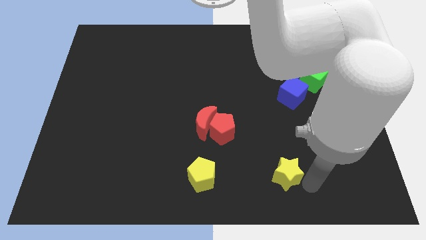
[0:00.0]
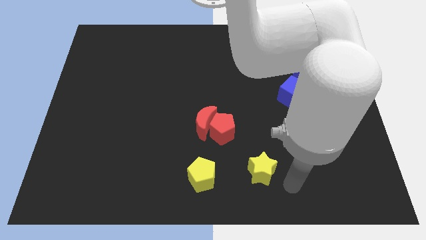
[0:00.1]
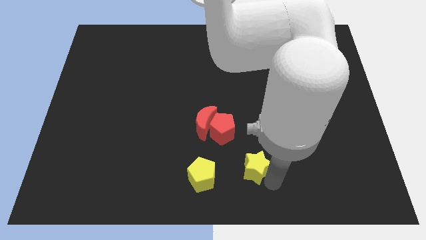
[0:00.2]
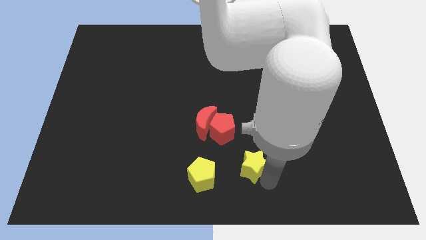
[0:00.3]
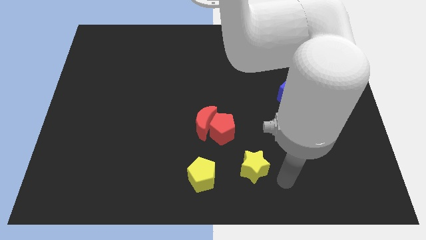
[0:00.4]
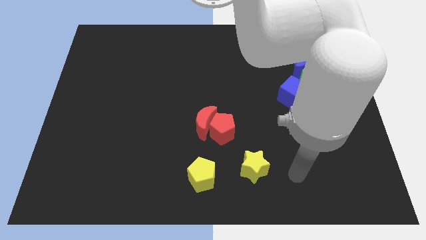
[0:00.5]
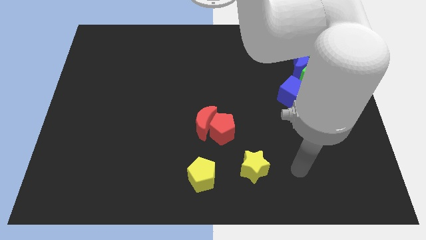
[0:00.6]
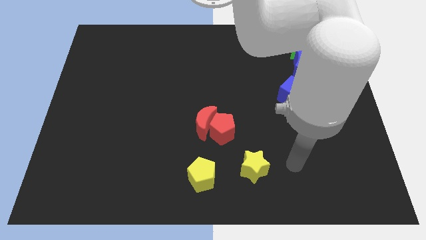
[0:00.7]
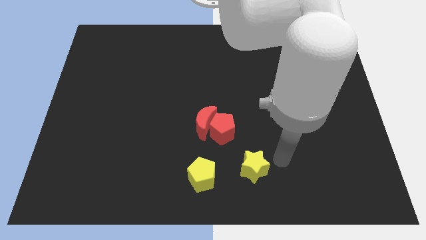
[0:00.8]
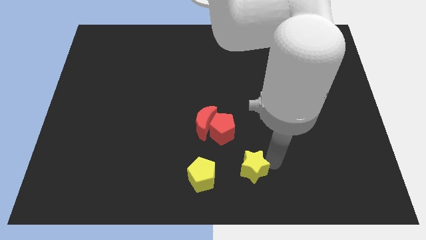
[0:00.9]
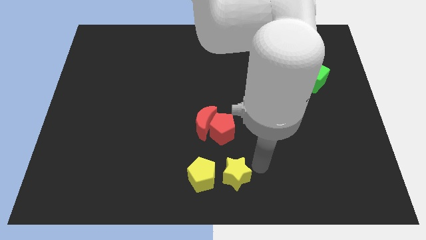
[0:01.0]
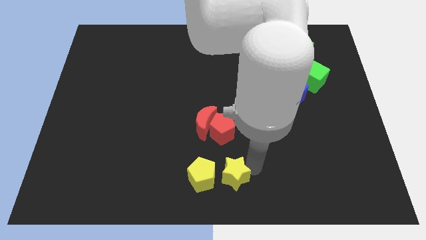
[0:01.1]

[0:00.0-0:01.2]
drag the yellow star to the right of the yellow pentagon

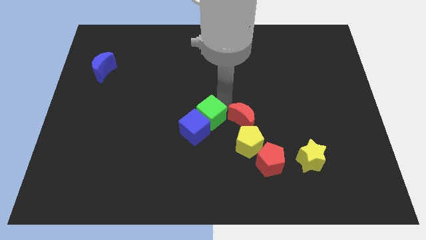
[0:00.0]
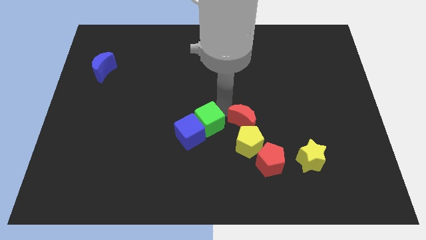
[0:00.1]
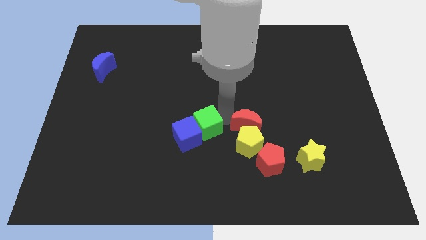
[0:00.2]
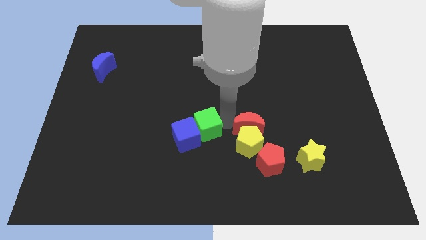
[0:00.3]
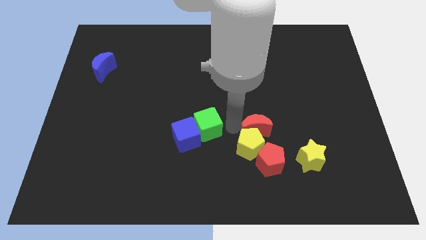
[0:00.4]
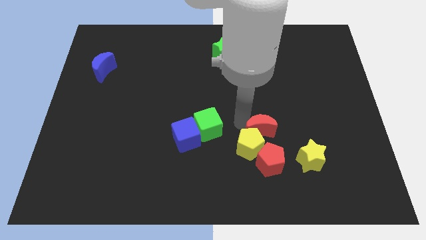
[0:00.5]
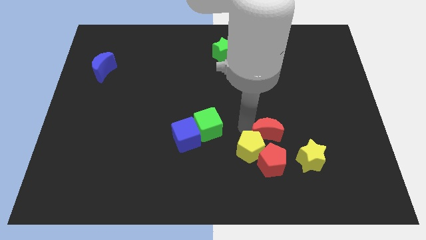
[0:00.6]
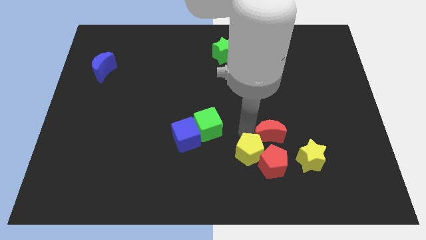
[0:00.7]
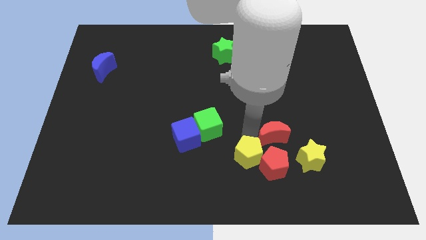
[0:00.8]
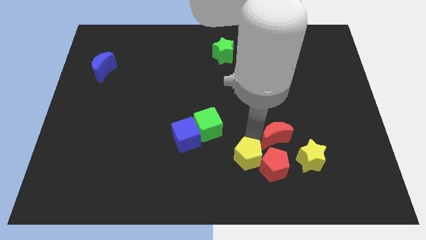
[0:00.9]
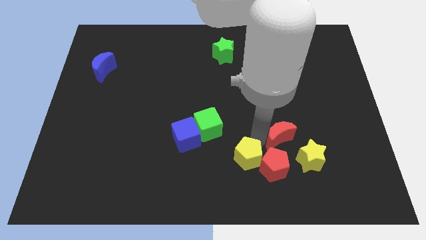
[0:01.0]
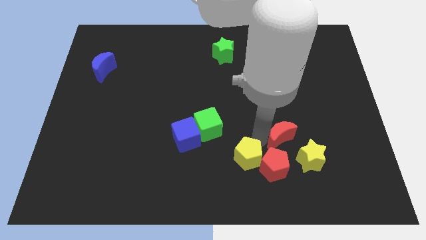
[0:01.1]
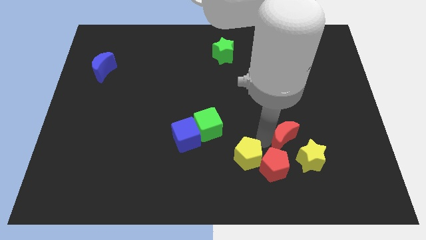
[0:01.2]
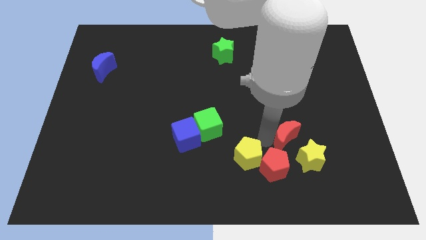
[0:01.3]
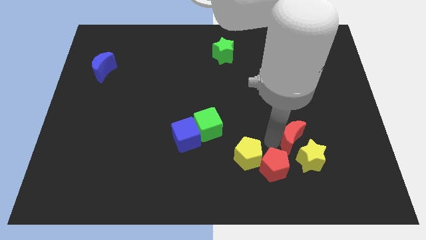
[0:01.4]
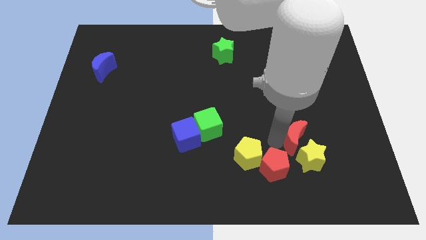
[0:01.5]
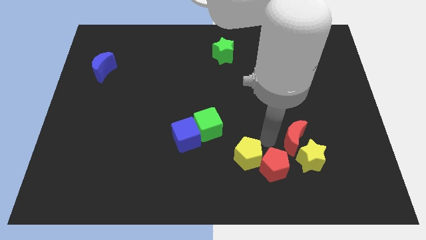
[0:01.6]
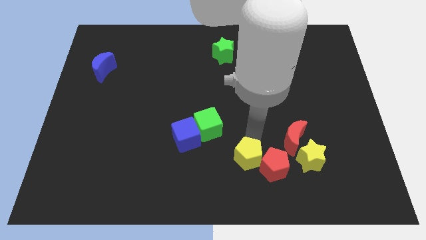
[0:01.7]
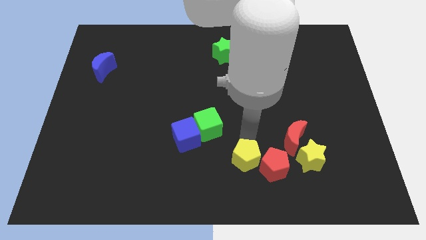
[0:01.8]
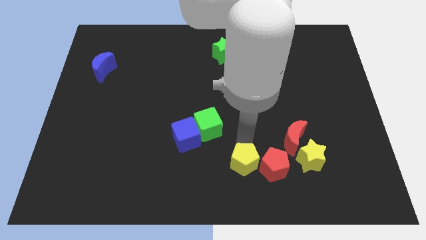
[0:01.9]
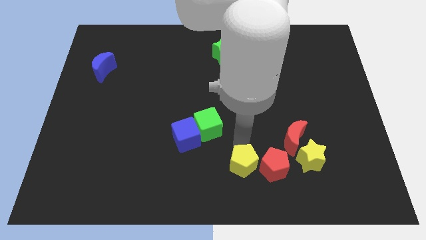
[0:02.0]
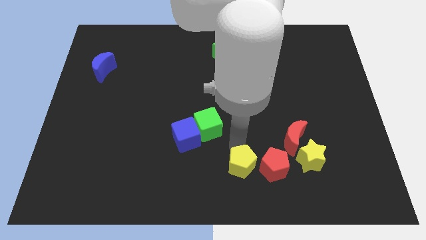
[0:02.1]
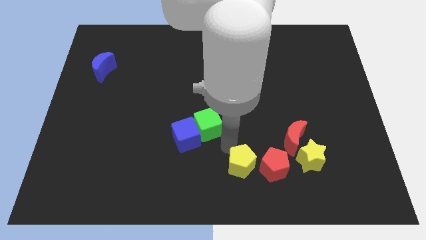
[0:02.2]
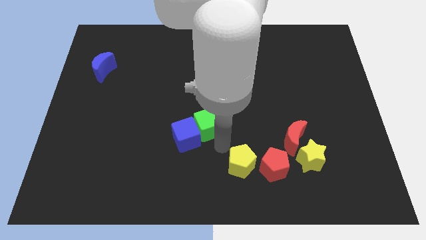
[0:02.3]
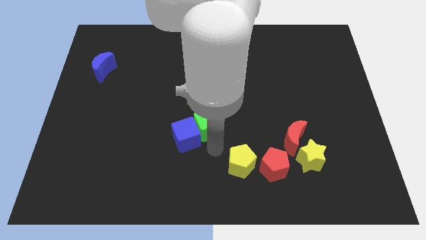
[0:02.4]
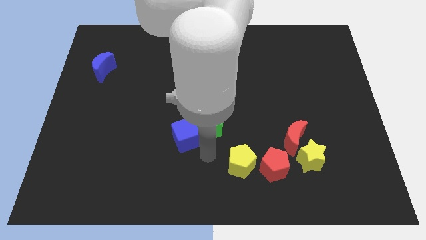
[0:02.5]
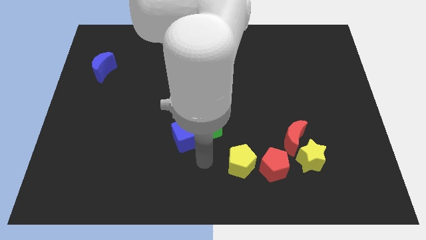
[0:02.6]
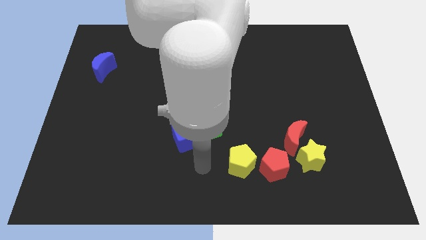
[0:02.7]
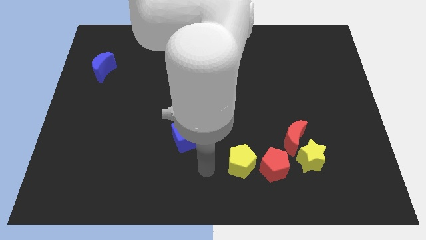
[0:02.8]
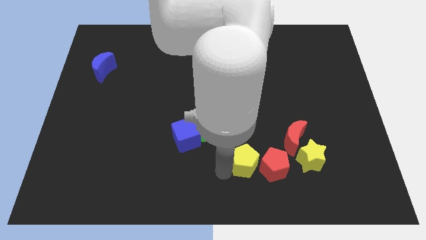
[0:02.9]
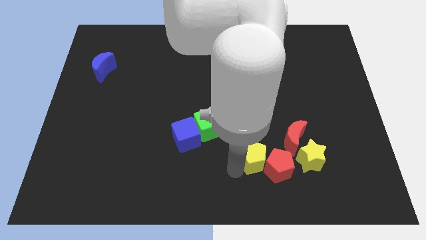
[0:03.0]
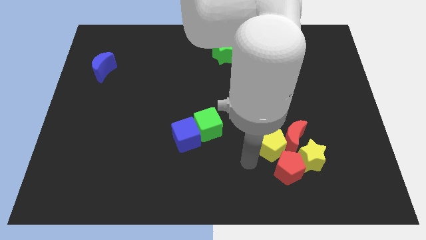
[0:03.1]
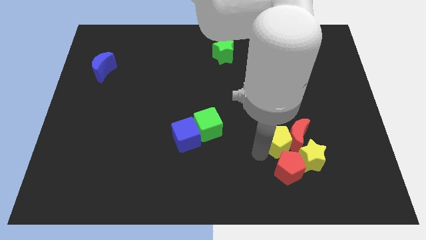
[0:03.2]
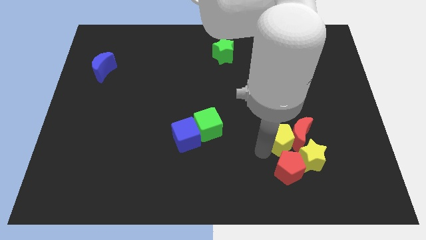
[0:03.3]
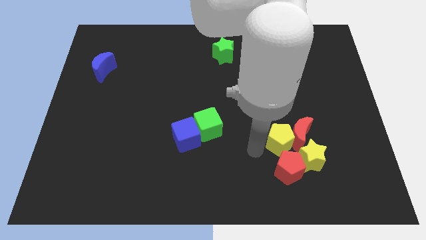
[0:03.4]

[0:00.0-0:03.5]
move the red crescent yellow pentagon close to the red pentagon and yellow star

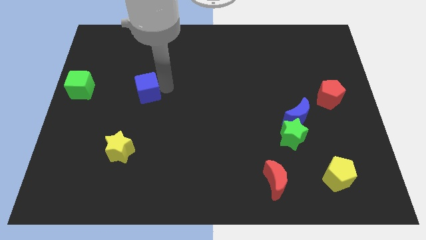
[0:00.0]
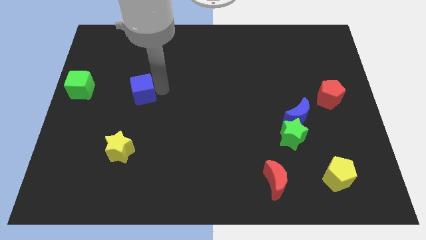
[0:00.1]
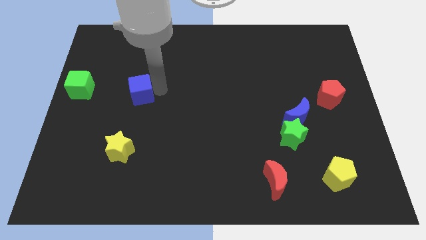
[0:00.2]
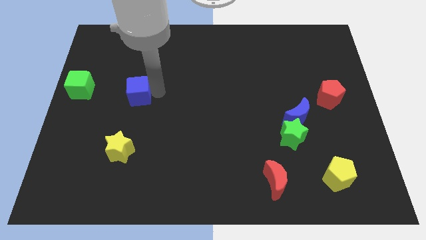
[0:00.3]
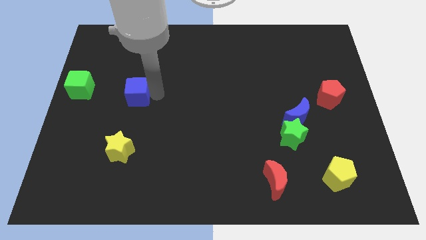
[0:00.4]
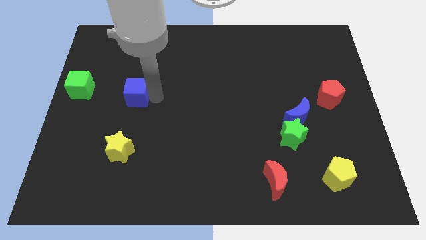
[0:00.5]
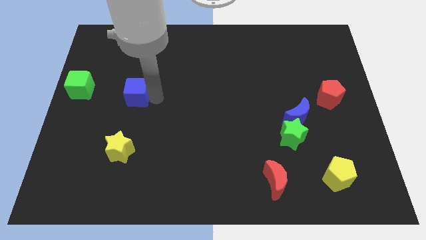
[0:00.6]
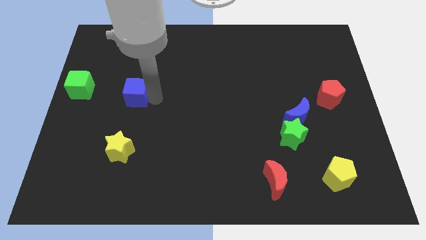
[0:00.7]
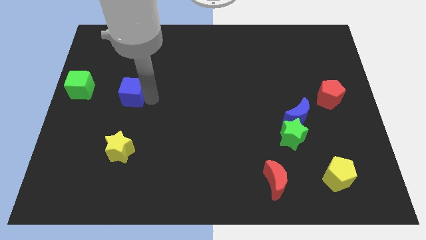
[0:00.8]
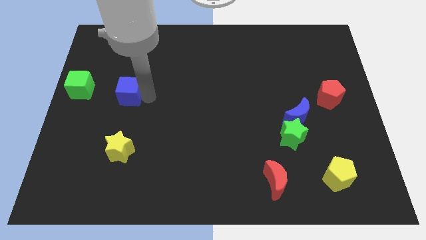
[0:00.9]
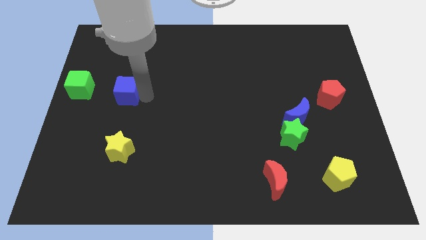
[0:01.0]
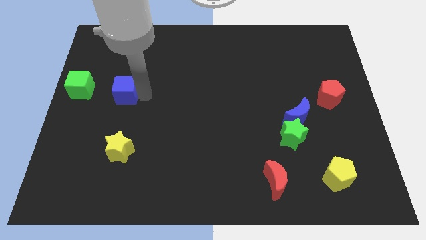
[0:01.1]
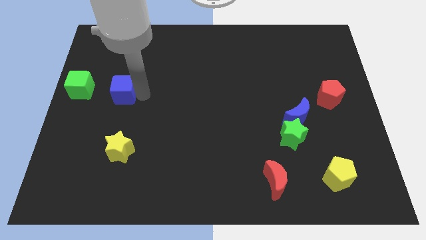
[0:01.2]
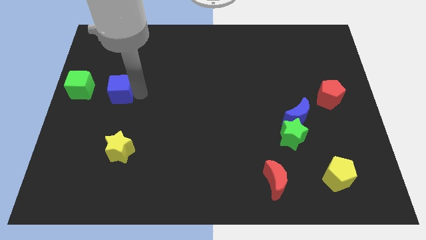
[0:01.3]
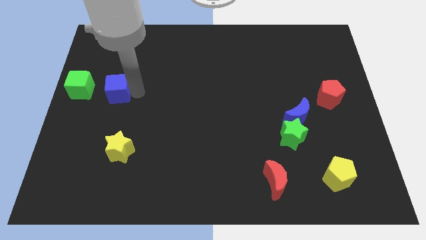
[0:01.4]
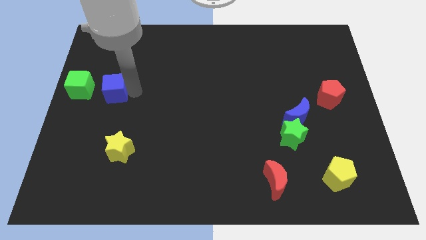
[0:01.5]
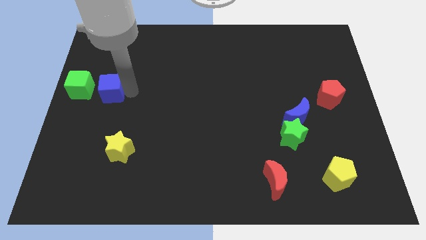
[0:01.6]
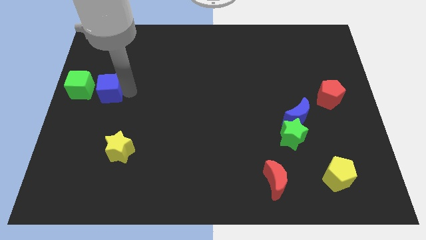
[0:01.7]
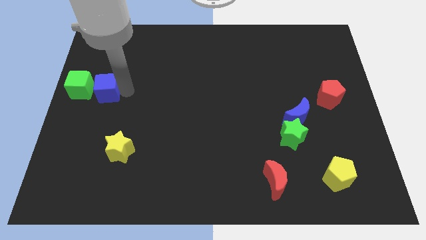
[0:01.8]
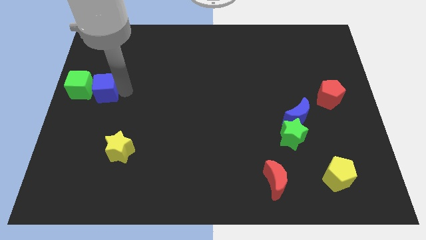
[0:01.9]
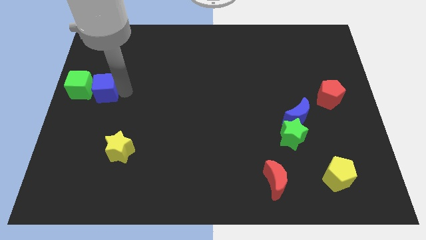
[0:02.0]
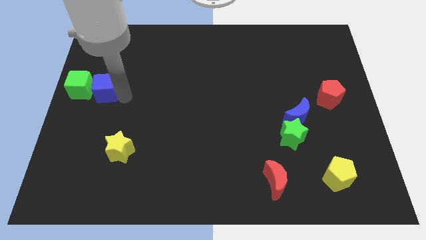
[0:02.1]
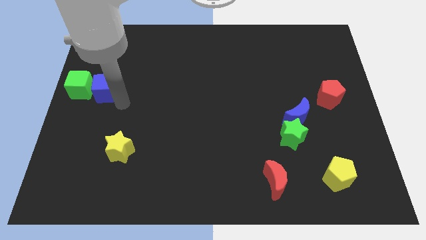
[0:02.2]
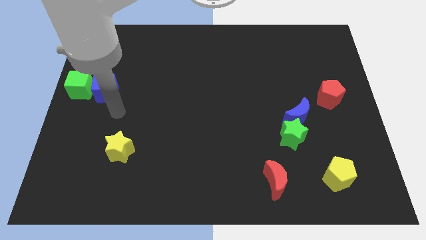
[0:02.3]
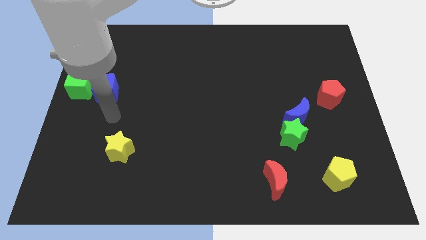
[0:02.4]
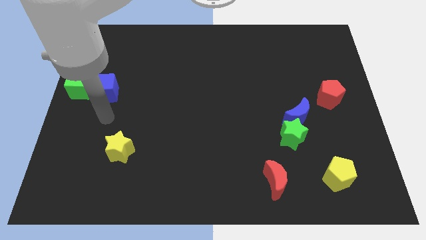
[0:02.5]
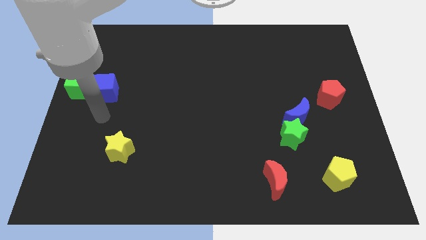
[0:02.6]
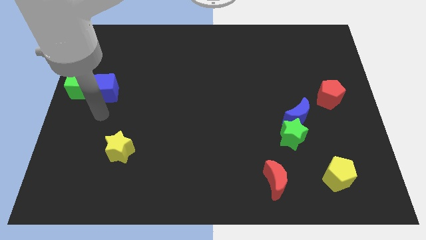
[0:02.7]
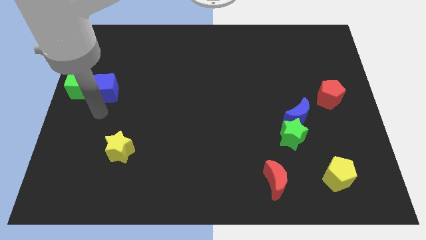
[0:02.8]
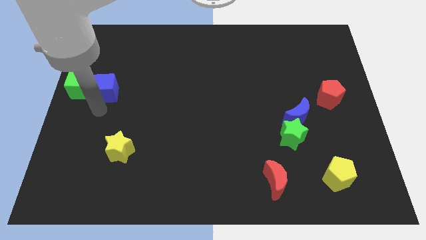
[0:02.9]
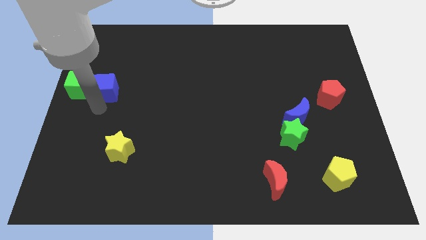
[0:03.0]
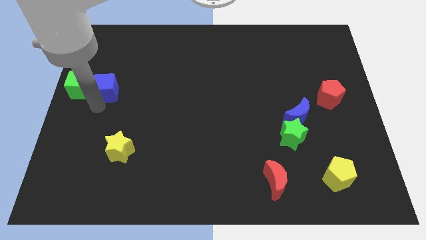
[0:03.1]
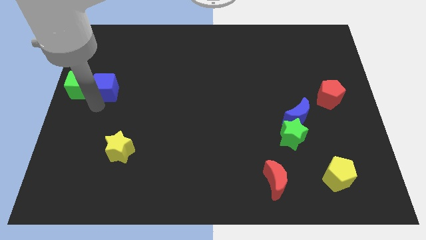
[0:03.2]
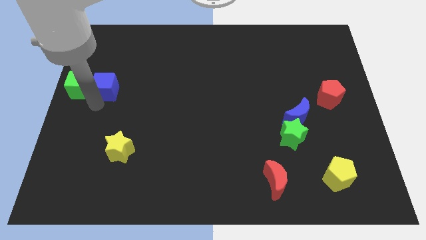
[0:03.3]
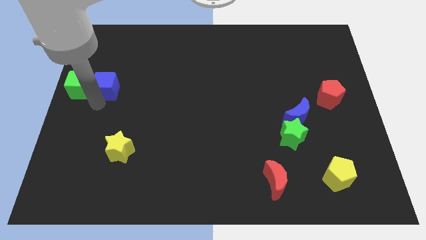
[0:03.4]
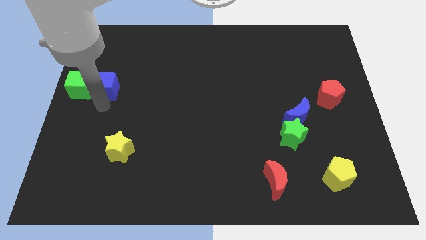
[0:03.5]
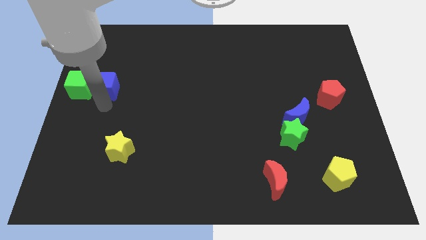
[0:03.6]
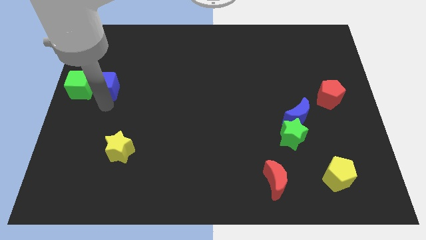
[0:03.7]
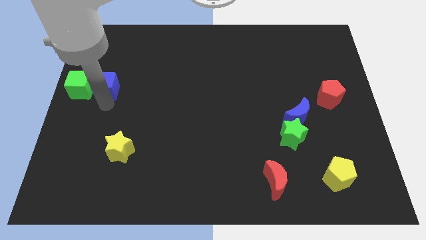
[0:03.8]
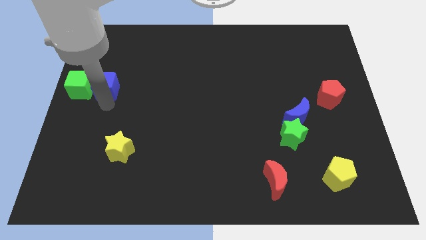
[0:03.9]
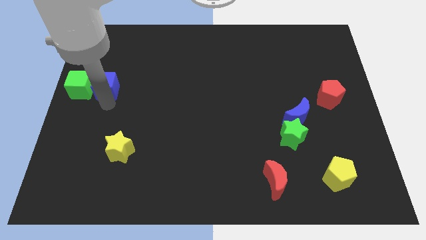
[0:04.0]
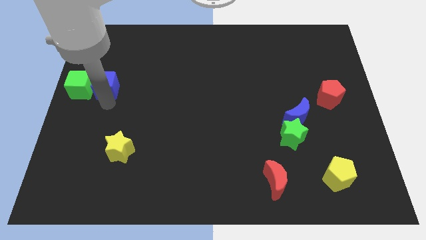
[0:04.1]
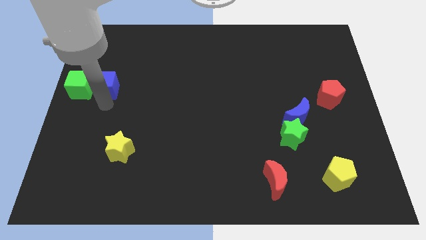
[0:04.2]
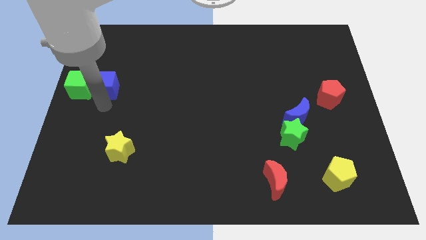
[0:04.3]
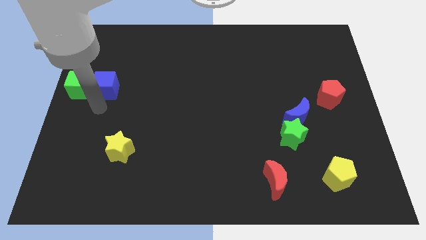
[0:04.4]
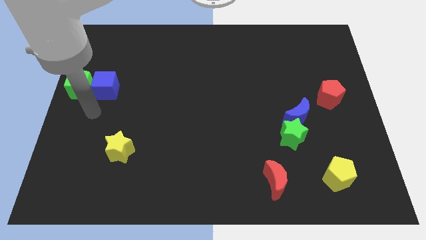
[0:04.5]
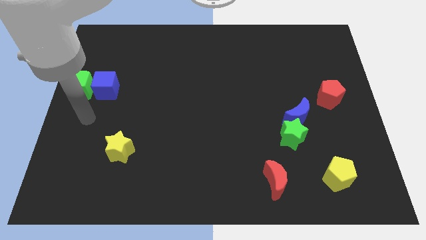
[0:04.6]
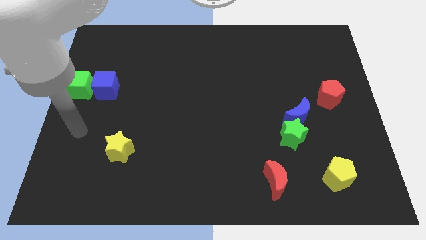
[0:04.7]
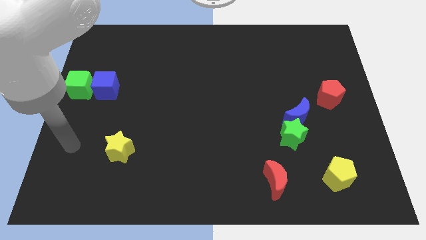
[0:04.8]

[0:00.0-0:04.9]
push the blue cube into the green cube
